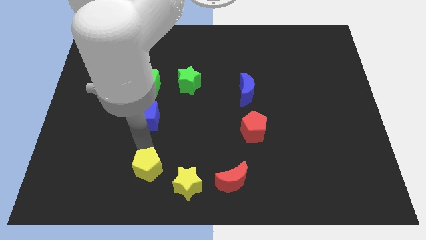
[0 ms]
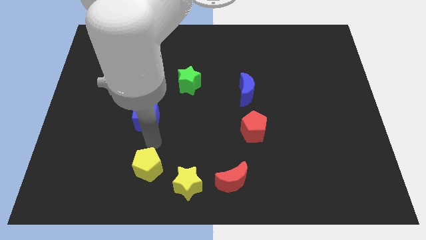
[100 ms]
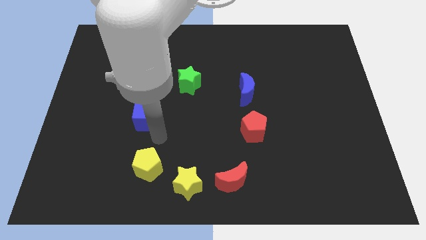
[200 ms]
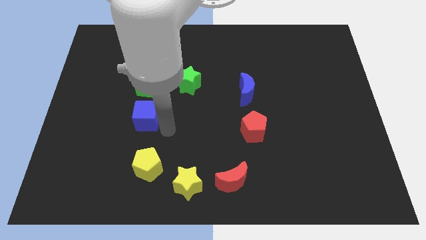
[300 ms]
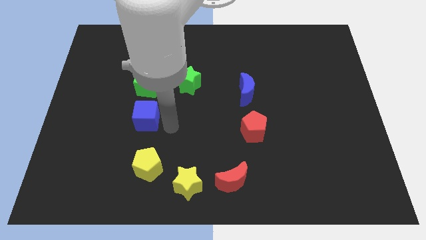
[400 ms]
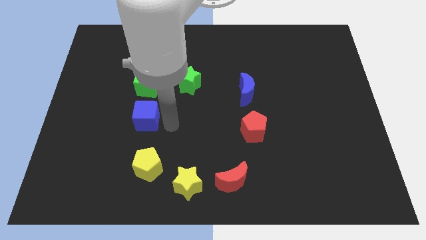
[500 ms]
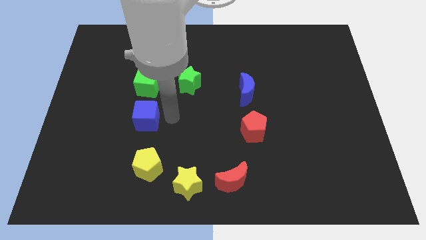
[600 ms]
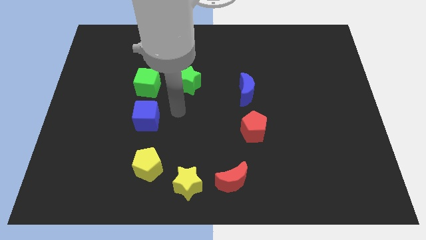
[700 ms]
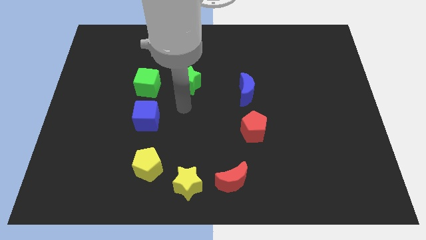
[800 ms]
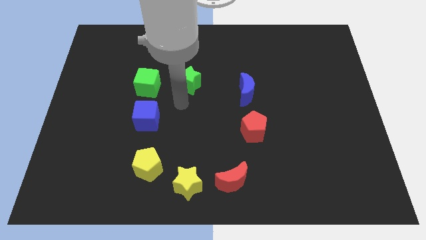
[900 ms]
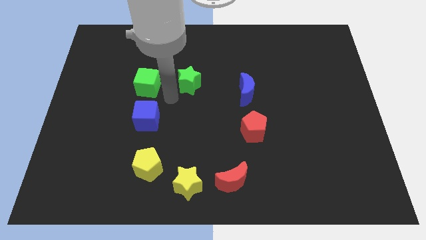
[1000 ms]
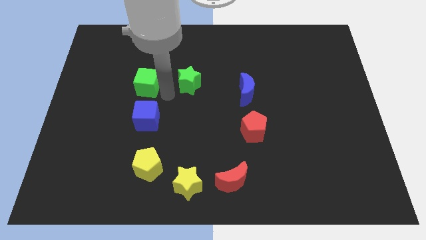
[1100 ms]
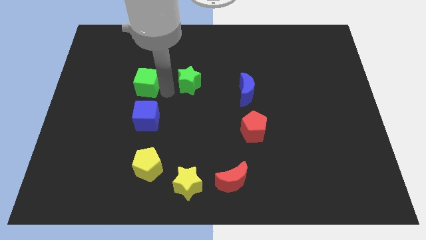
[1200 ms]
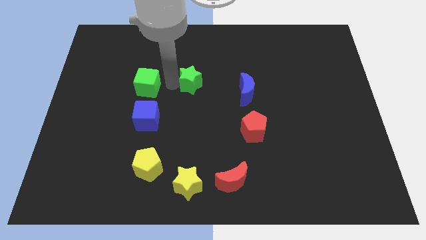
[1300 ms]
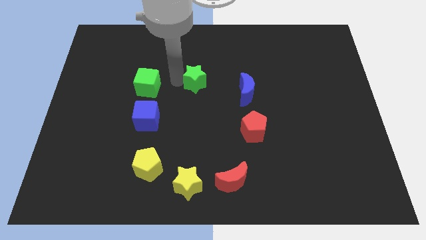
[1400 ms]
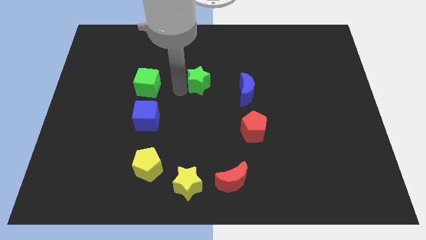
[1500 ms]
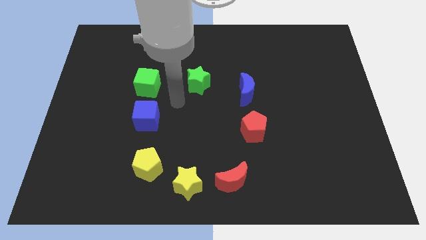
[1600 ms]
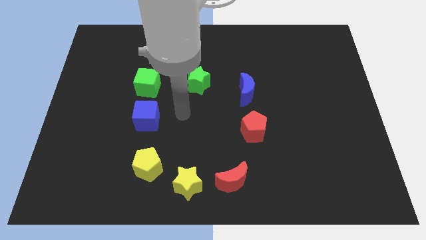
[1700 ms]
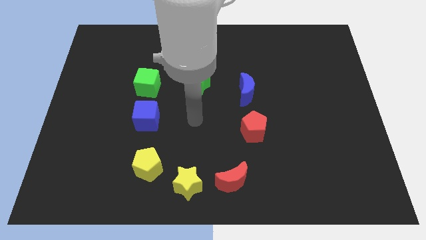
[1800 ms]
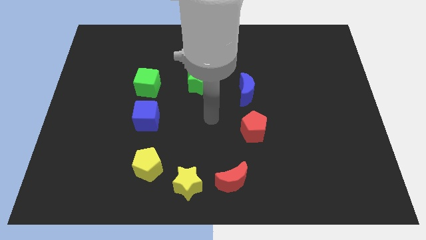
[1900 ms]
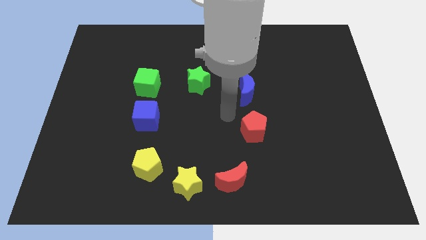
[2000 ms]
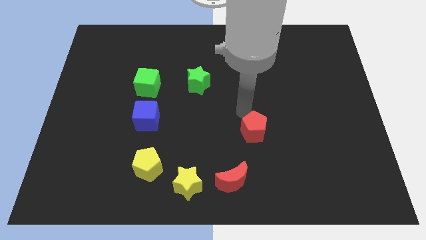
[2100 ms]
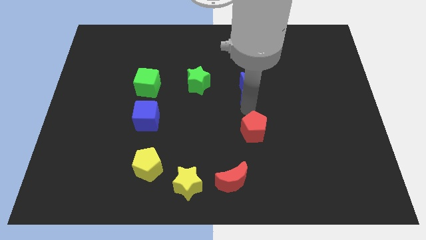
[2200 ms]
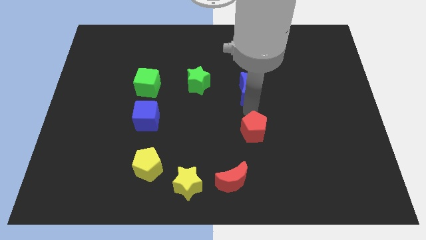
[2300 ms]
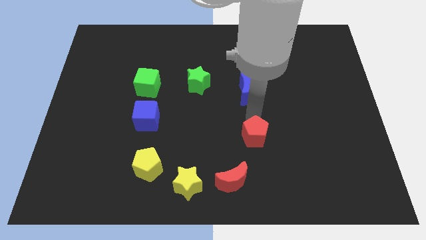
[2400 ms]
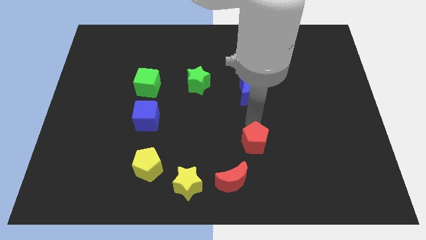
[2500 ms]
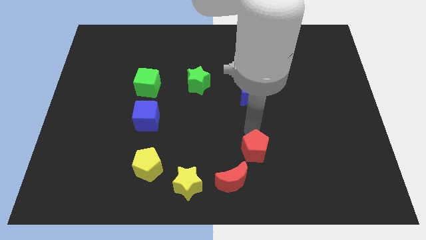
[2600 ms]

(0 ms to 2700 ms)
move green star slightly towards its right

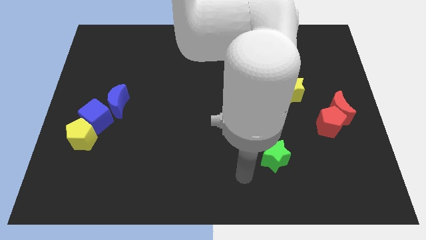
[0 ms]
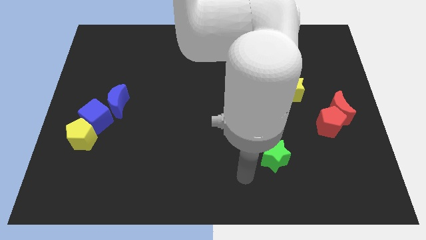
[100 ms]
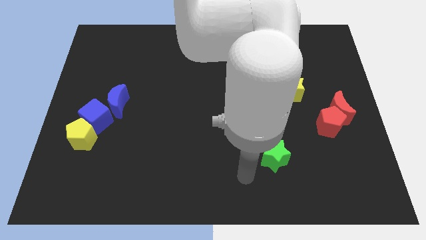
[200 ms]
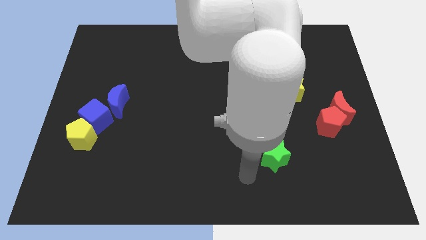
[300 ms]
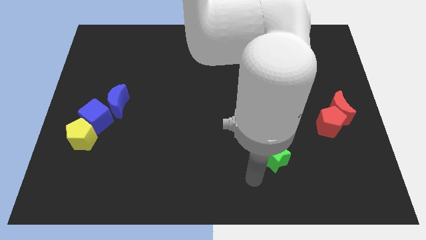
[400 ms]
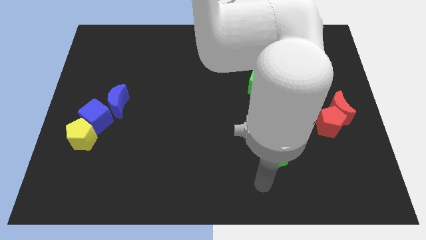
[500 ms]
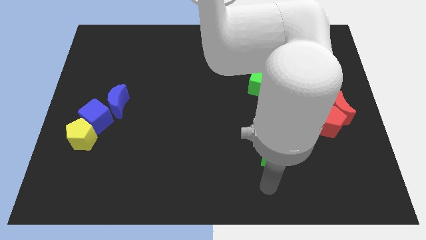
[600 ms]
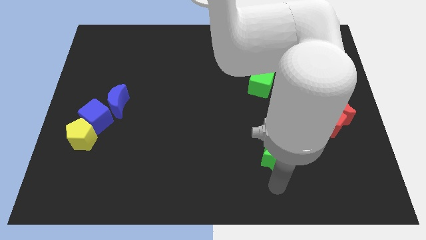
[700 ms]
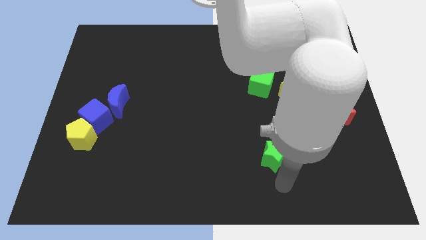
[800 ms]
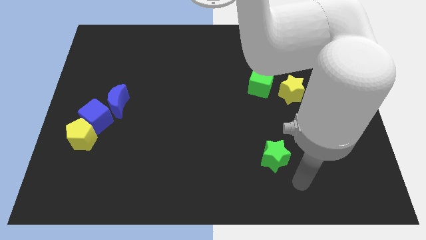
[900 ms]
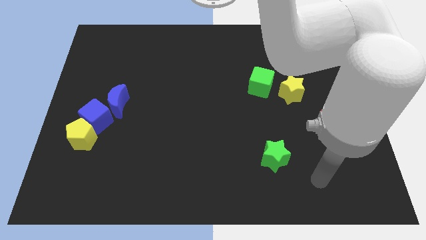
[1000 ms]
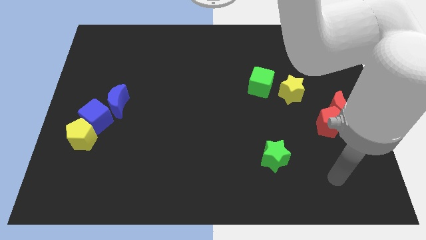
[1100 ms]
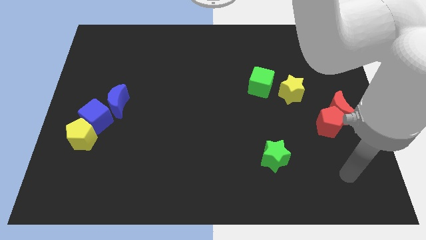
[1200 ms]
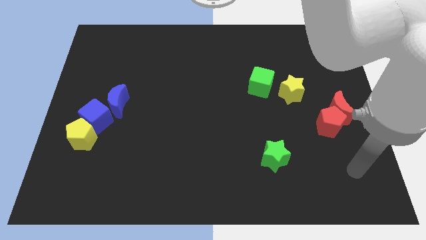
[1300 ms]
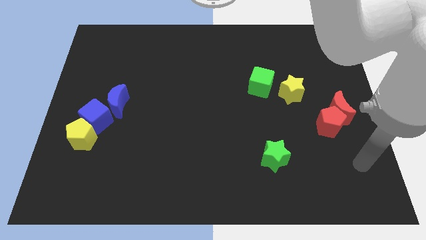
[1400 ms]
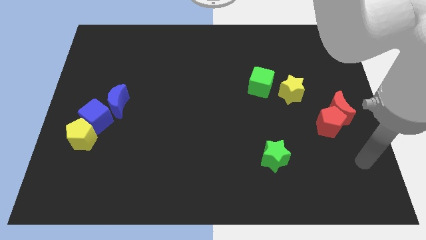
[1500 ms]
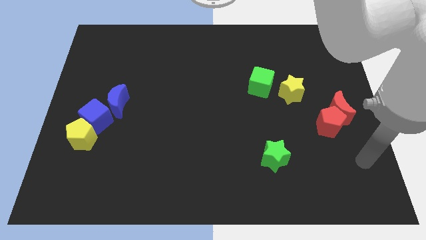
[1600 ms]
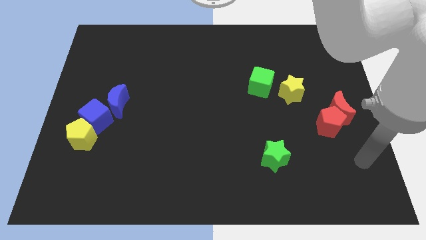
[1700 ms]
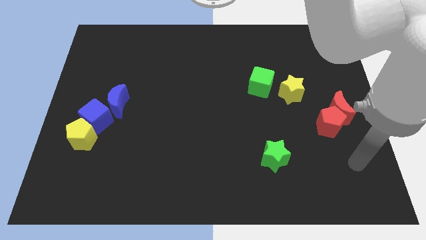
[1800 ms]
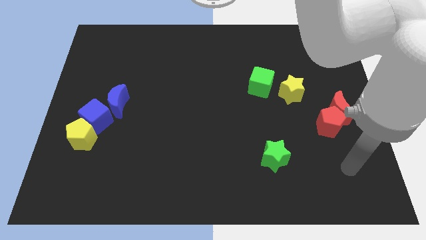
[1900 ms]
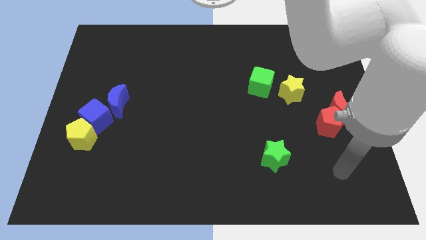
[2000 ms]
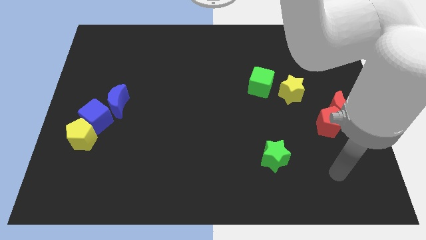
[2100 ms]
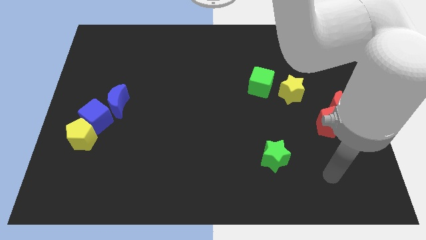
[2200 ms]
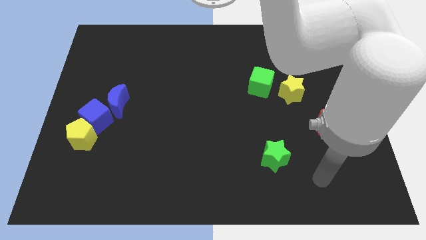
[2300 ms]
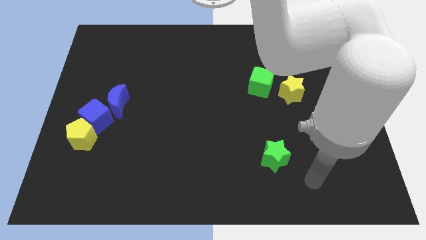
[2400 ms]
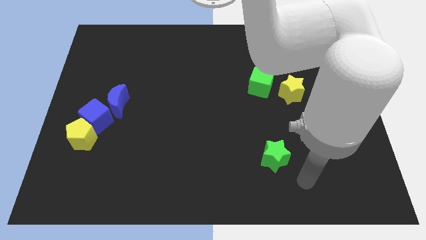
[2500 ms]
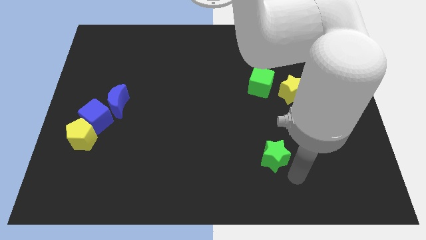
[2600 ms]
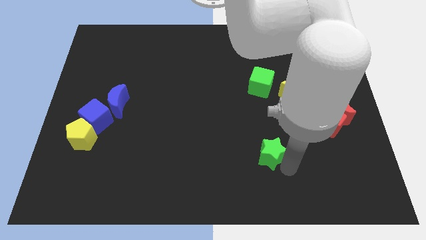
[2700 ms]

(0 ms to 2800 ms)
move your arm towards the bottom side of the green star

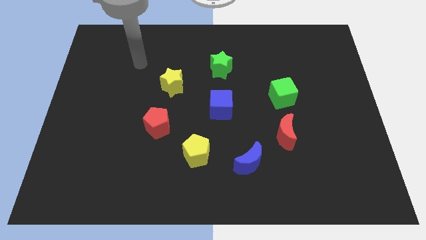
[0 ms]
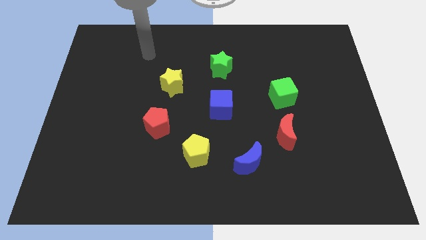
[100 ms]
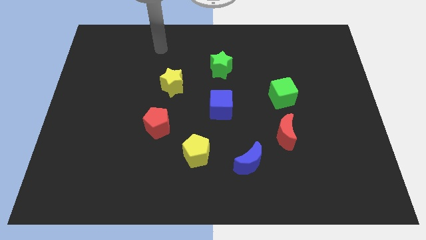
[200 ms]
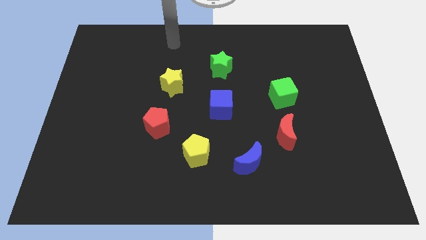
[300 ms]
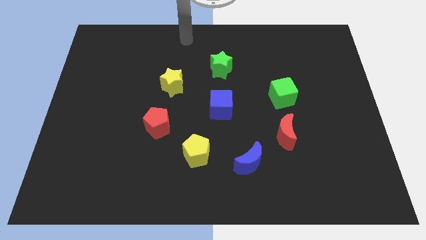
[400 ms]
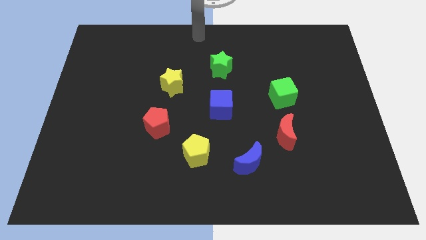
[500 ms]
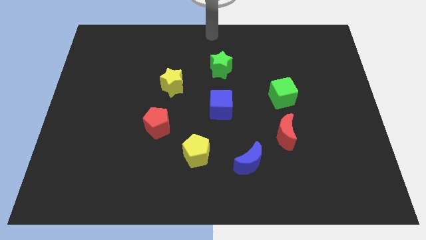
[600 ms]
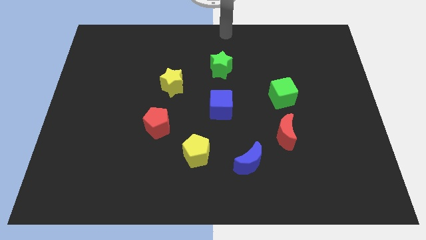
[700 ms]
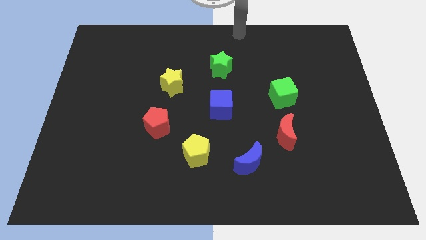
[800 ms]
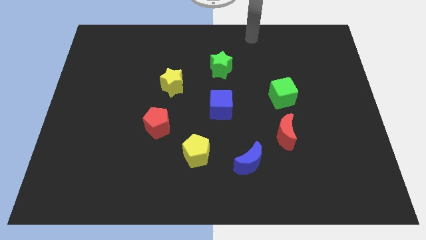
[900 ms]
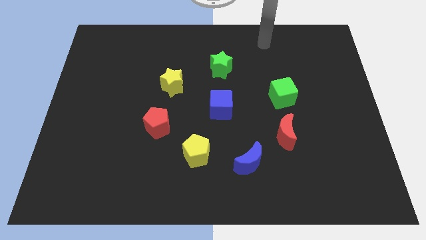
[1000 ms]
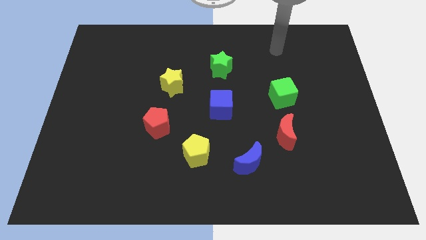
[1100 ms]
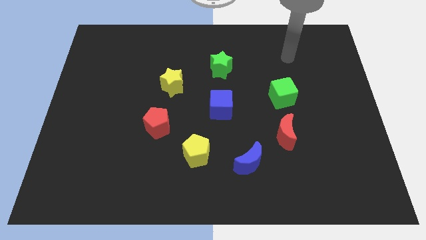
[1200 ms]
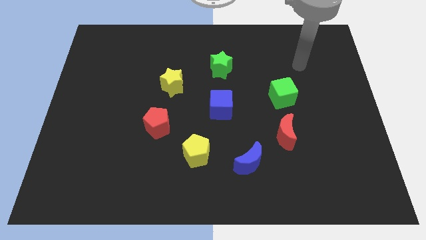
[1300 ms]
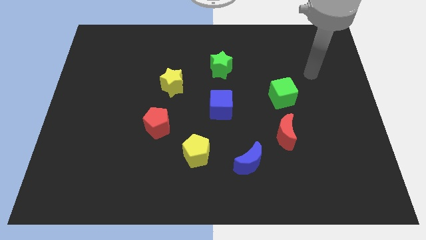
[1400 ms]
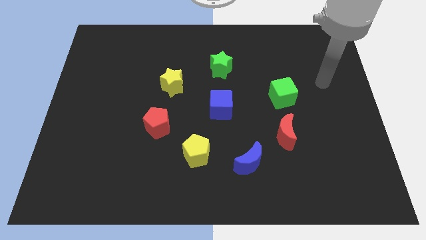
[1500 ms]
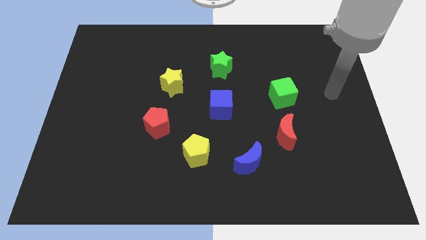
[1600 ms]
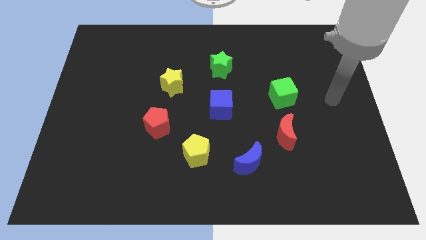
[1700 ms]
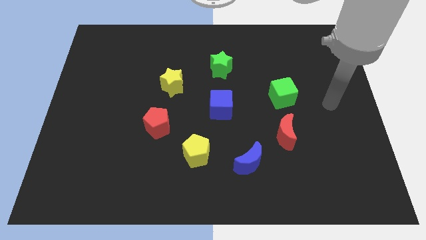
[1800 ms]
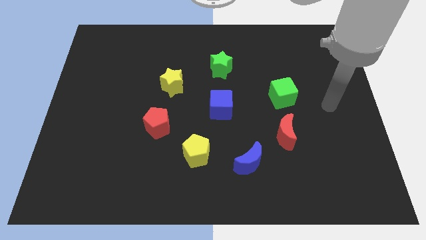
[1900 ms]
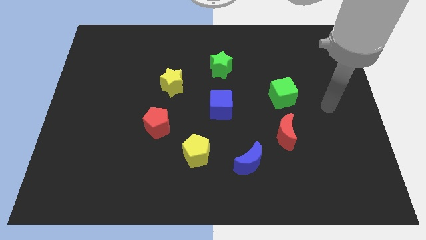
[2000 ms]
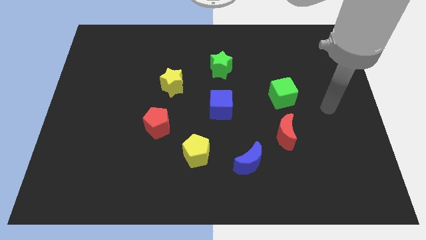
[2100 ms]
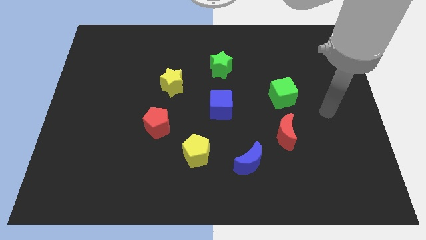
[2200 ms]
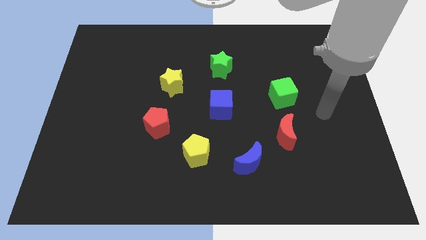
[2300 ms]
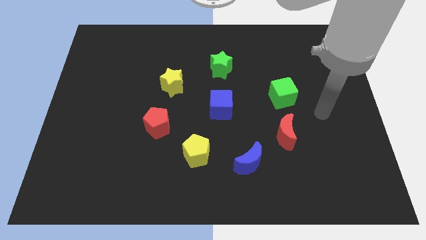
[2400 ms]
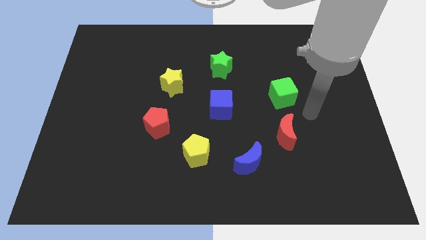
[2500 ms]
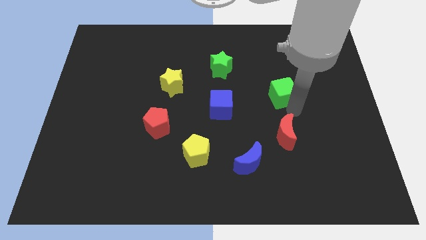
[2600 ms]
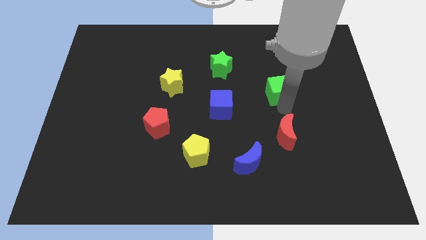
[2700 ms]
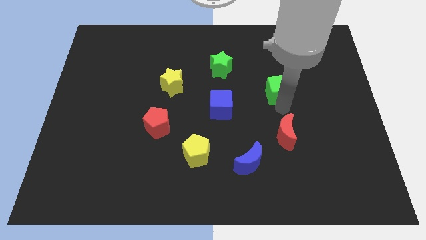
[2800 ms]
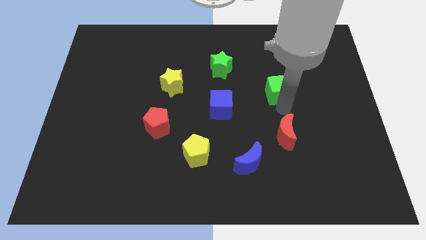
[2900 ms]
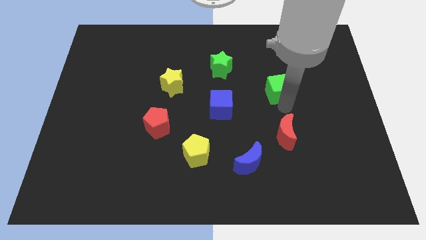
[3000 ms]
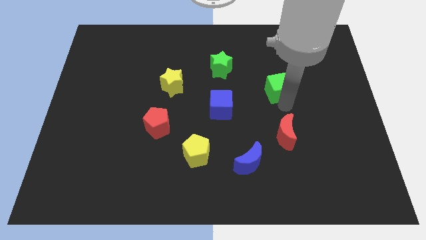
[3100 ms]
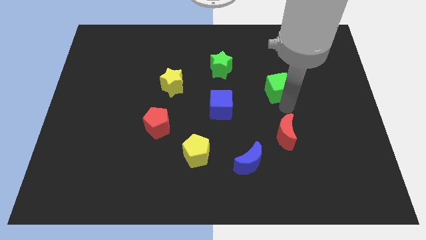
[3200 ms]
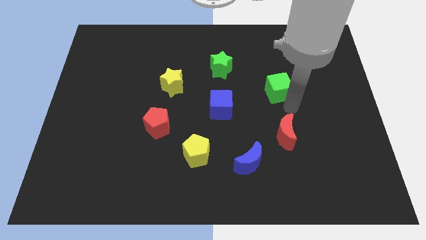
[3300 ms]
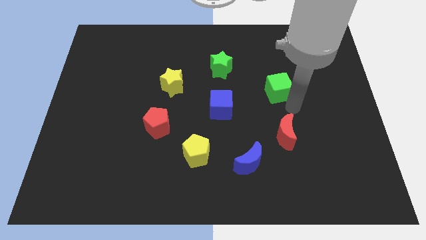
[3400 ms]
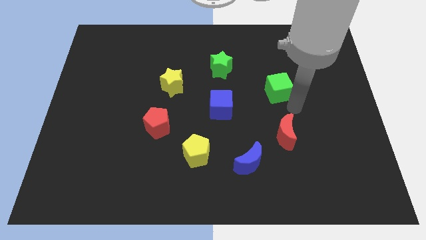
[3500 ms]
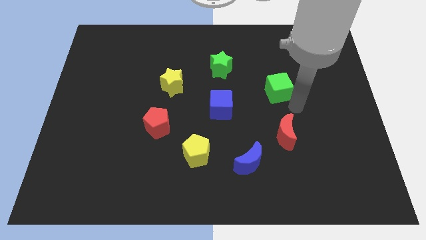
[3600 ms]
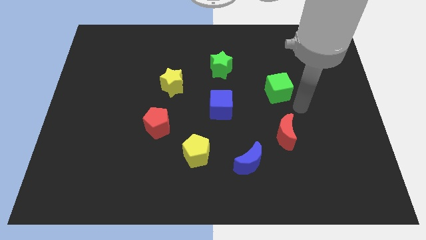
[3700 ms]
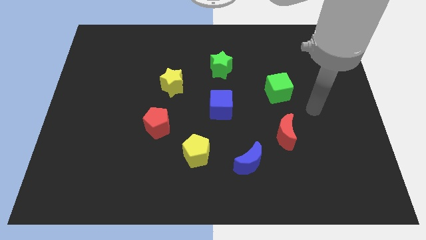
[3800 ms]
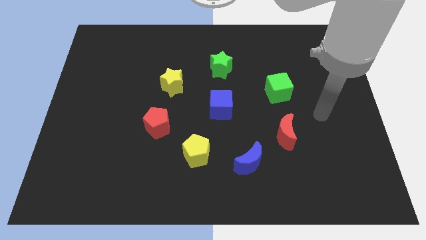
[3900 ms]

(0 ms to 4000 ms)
slightly push the green cube to the top of the board
